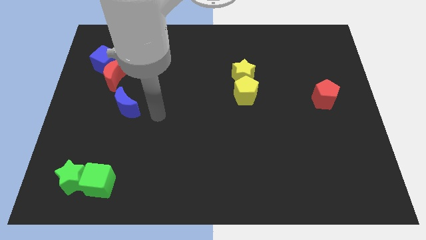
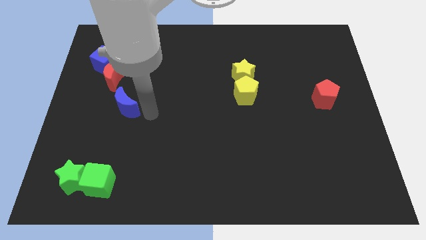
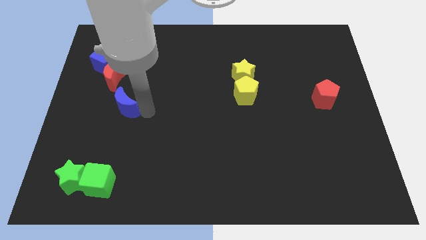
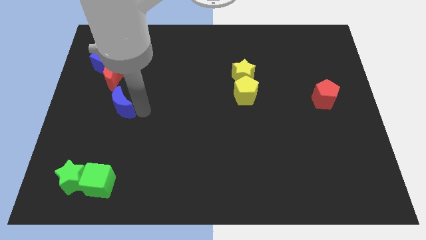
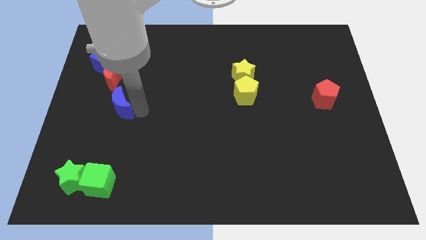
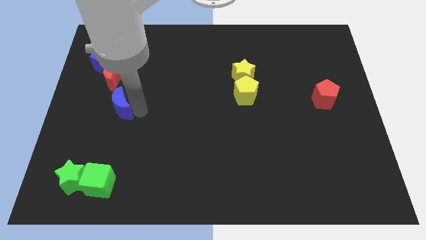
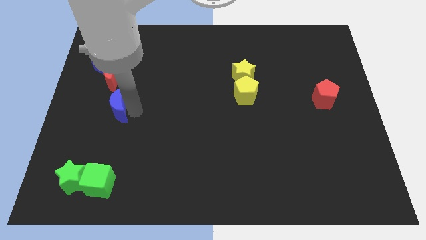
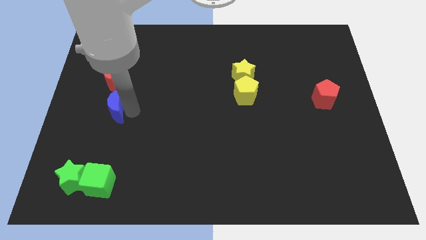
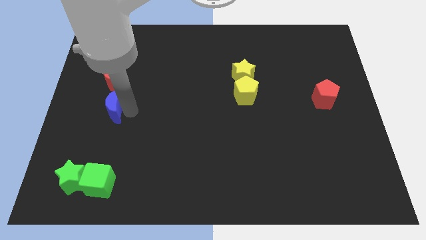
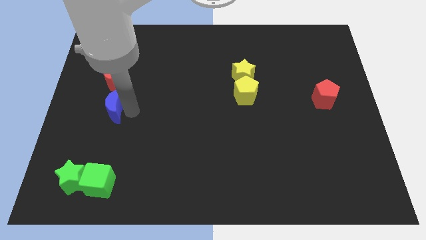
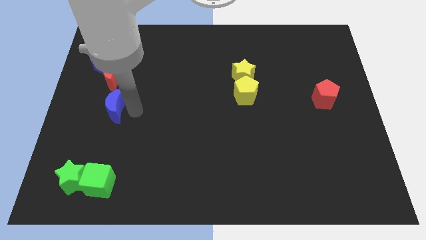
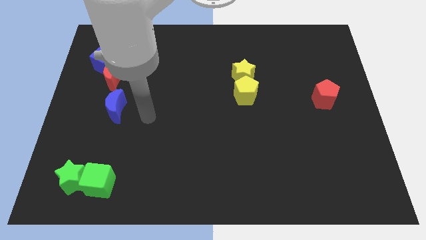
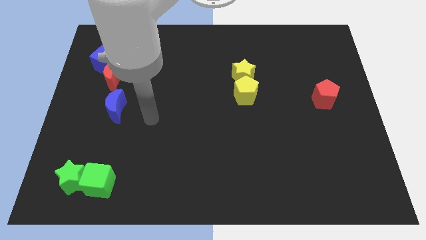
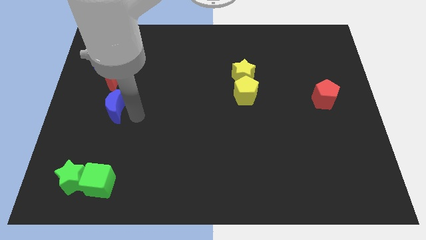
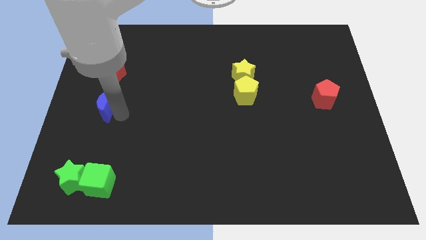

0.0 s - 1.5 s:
place the blue moon above the green cube

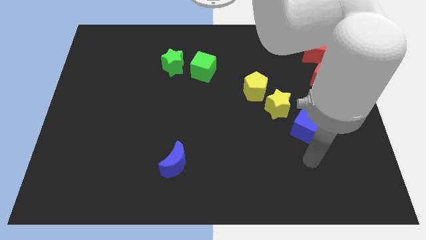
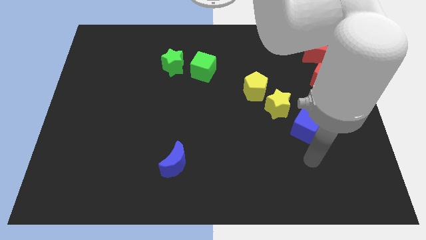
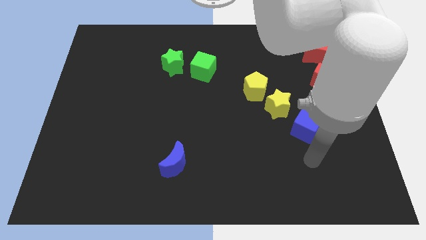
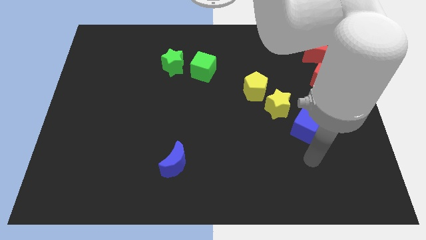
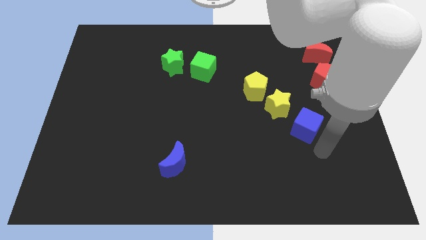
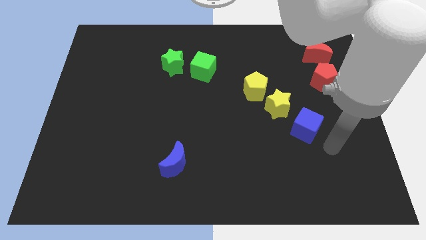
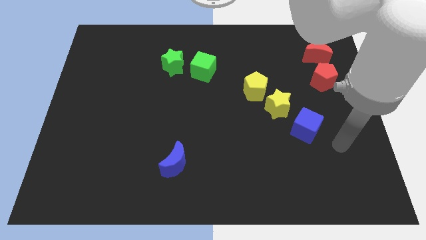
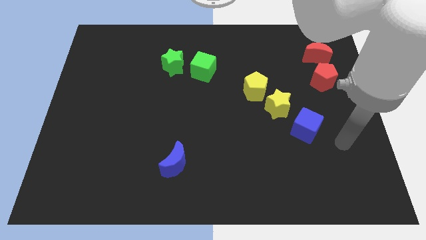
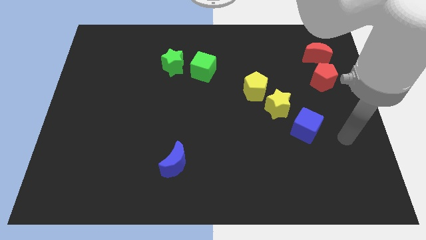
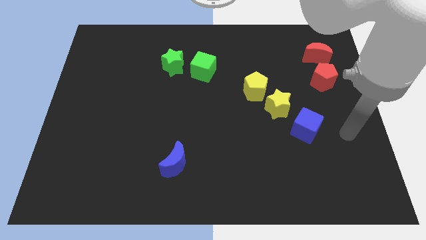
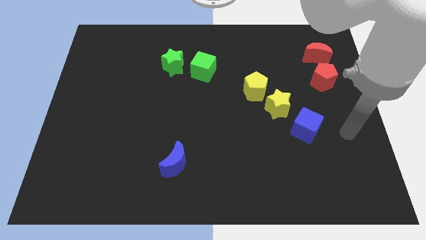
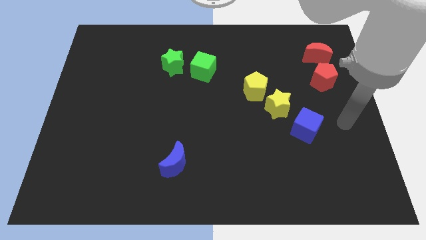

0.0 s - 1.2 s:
point your hand to the right of the blue cube

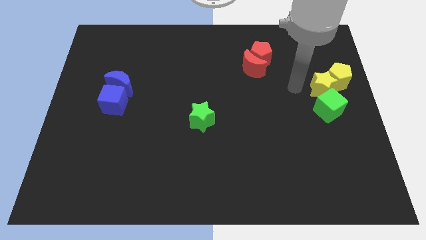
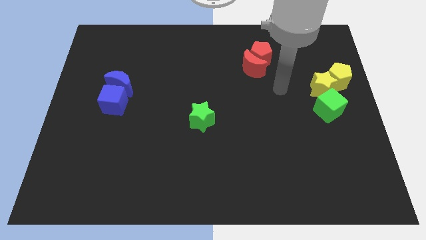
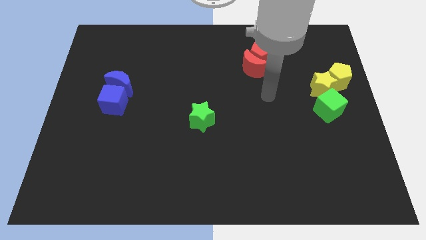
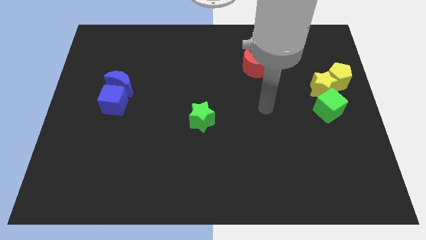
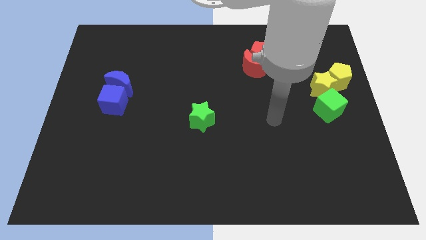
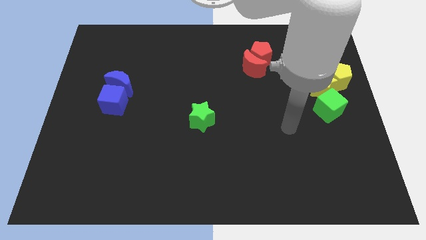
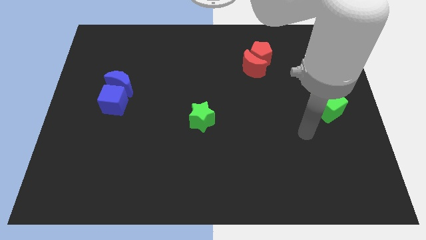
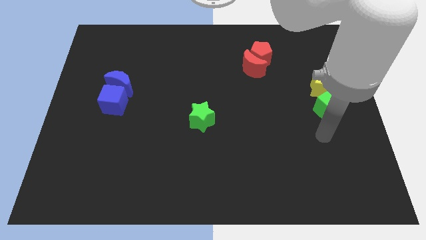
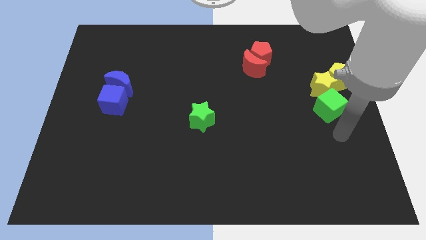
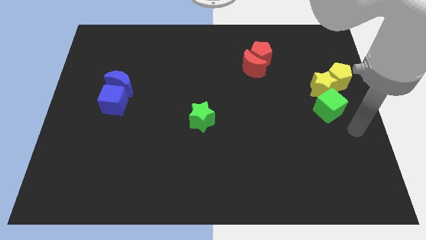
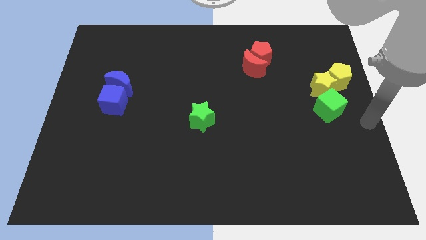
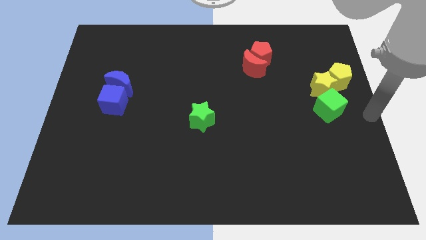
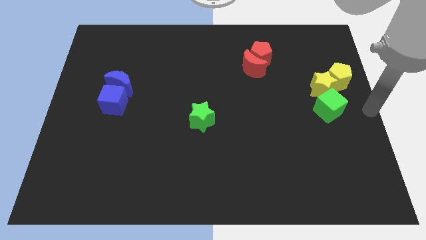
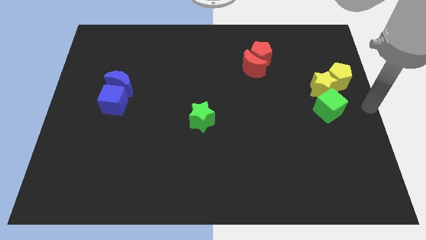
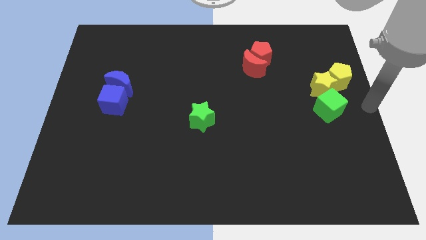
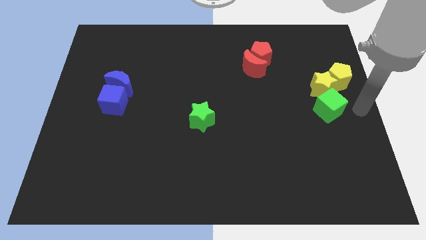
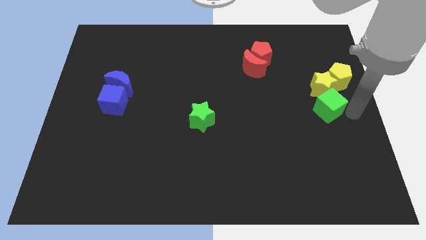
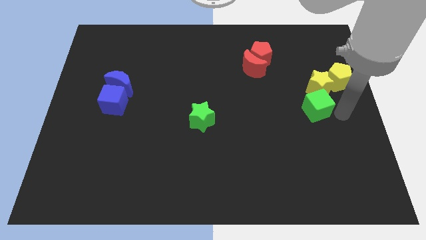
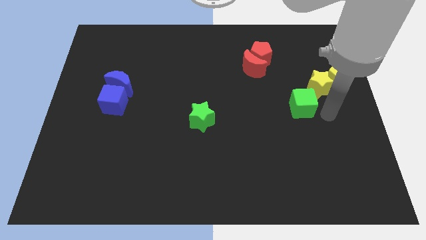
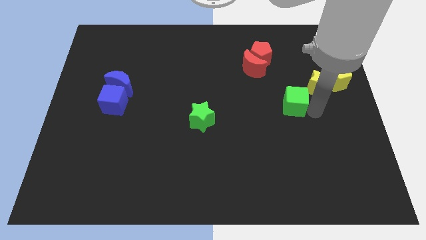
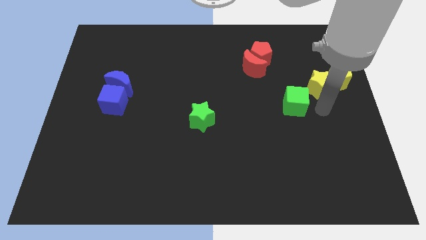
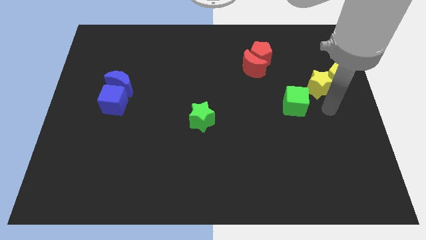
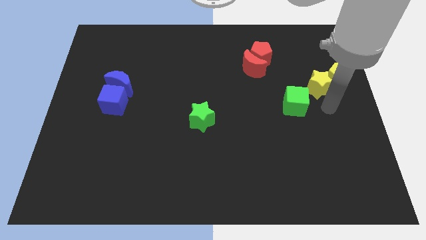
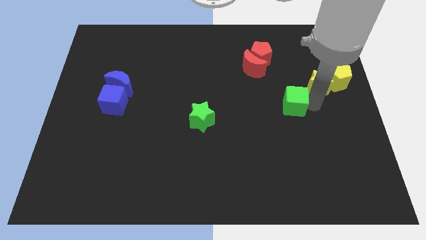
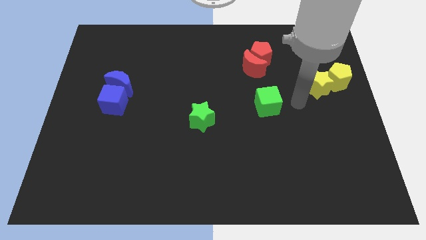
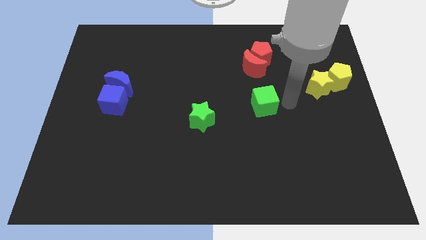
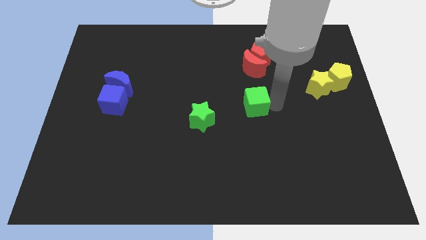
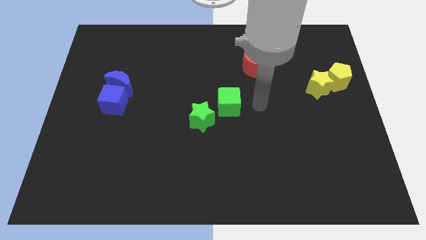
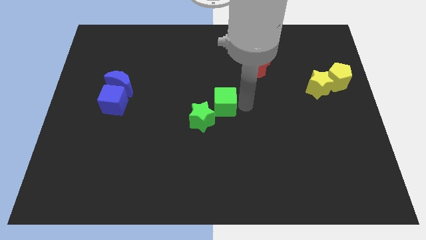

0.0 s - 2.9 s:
move the green cube in between the yellow star and green star

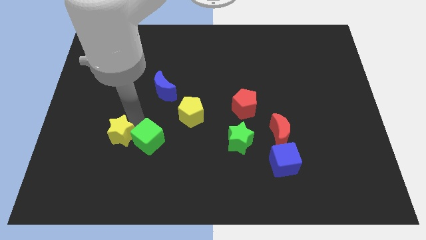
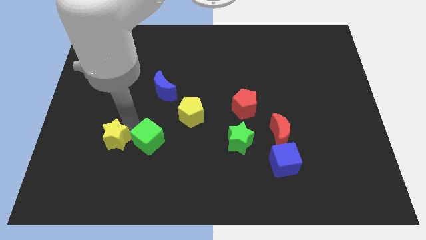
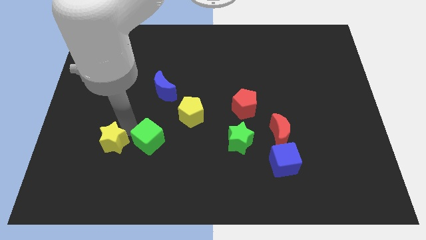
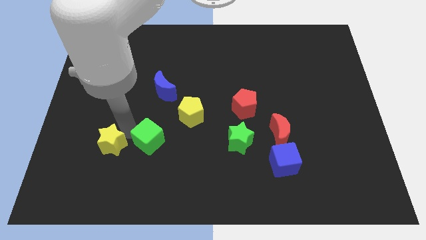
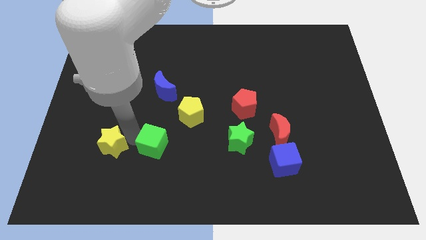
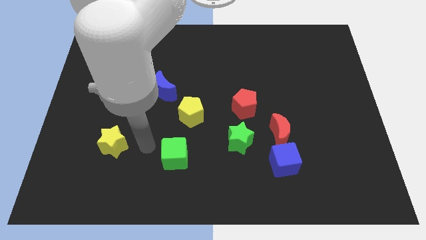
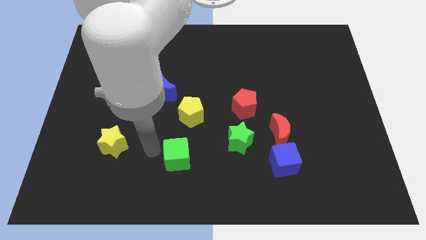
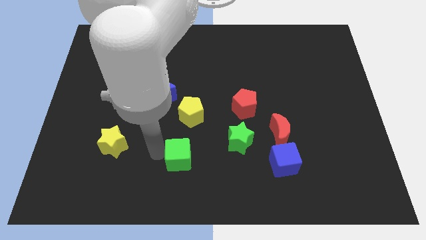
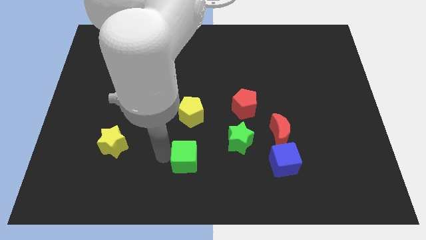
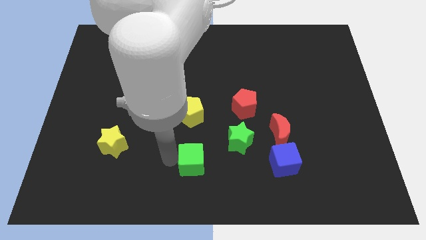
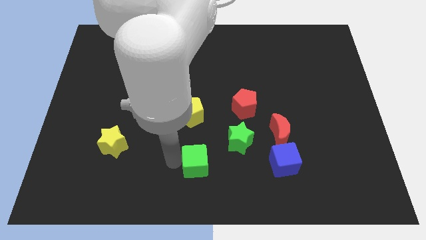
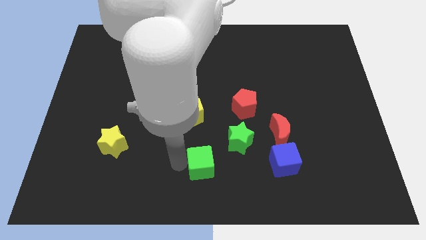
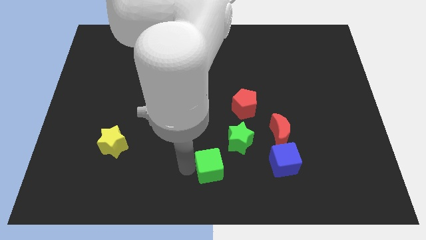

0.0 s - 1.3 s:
place green cube to the bottom right of yellow pentagon

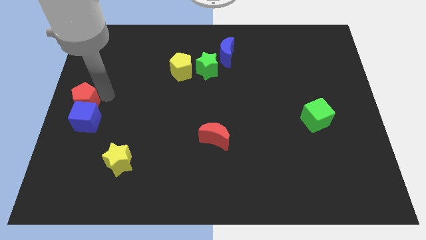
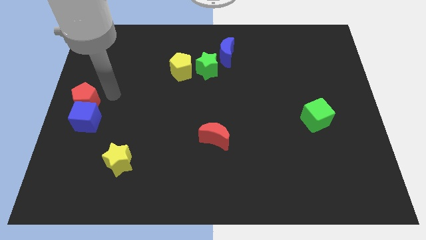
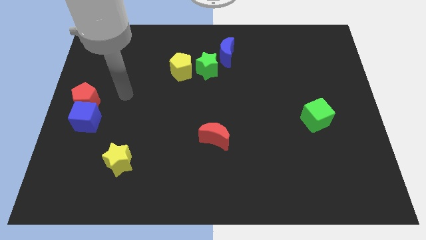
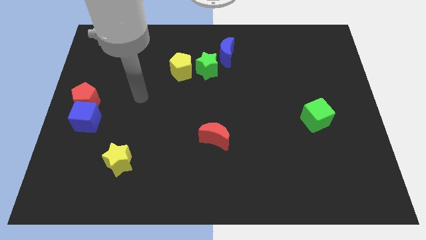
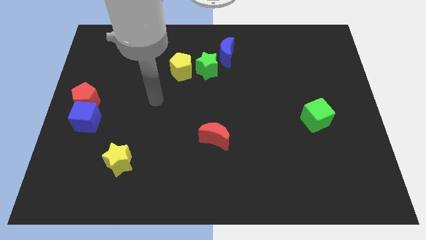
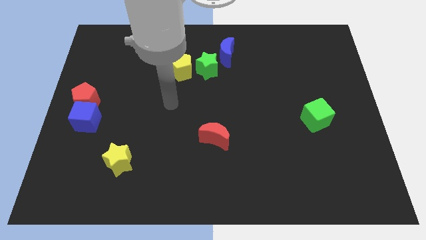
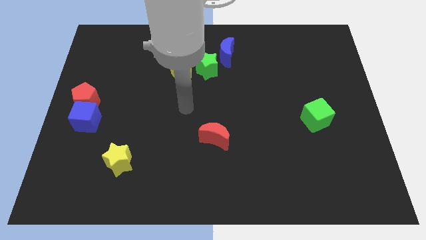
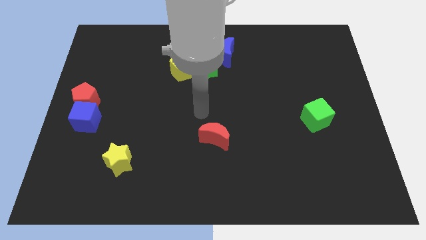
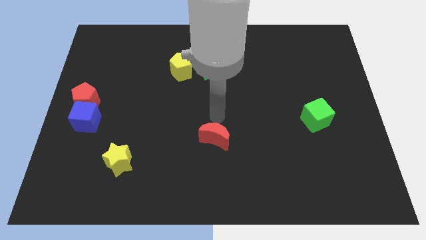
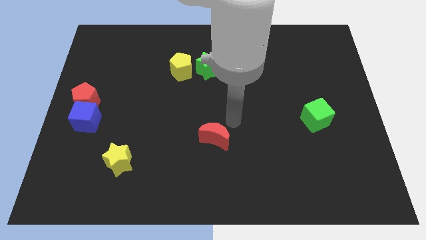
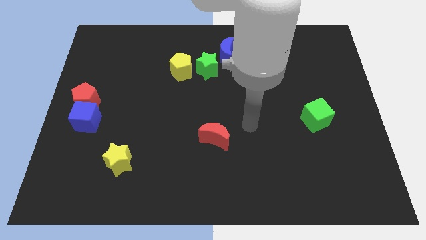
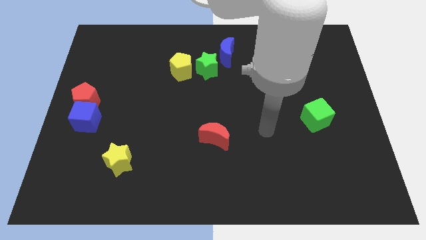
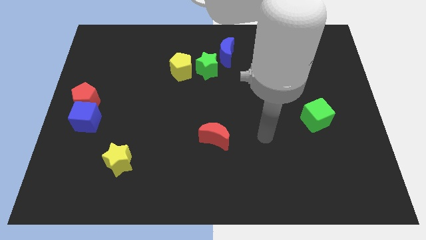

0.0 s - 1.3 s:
place your arm in between the red moon and the green cube

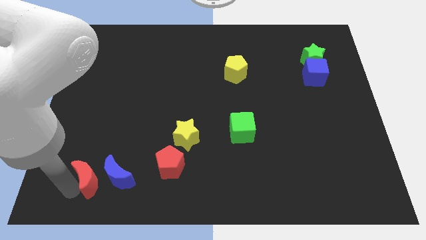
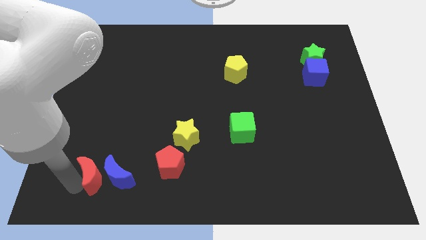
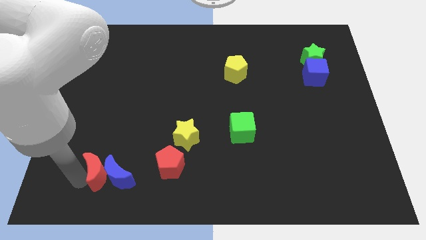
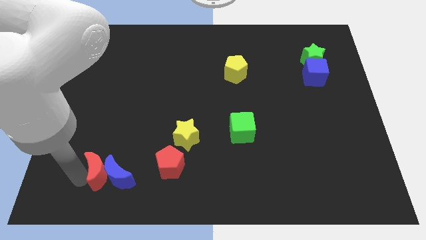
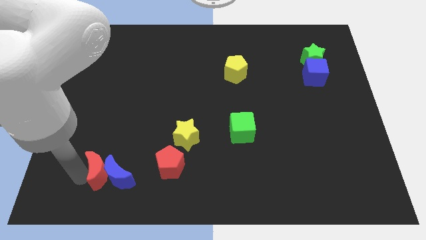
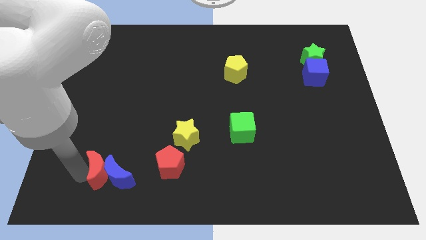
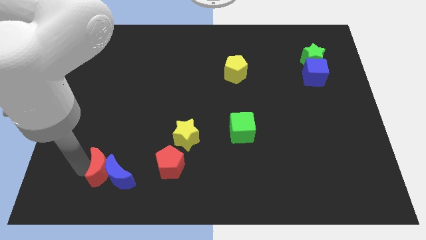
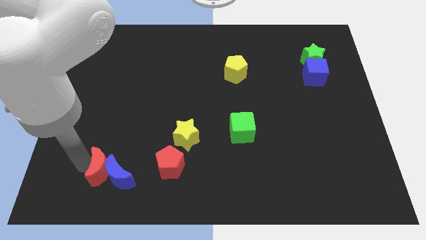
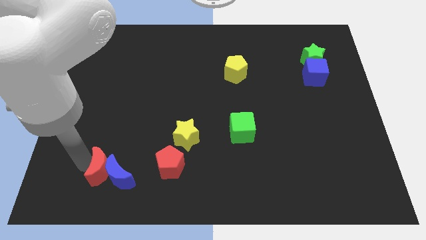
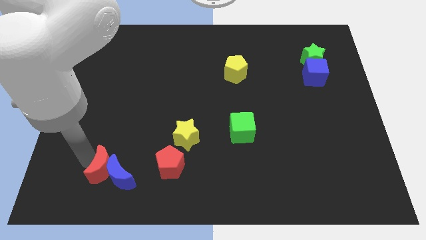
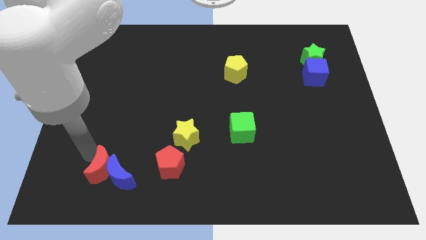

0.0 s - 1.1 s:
push the red moon into the blue moon
